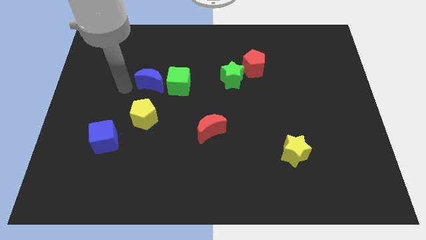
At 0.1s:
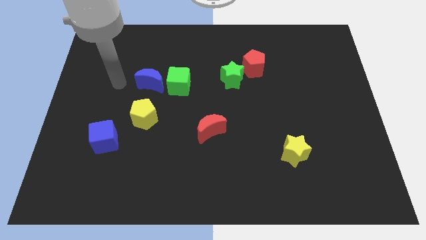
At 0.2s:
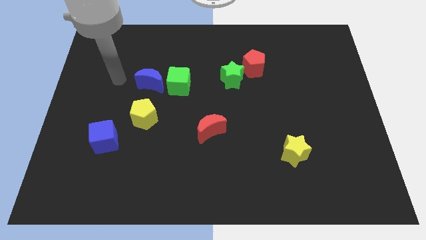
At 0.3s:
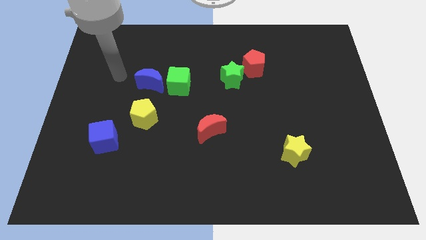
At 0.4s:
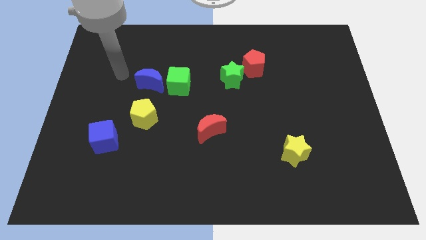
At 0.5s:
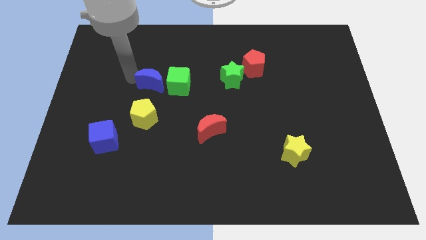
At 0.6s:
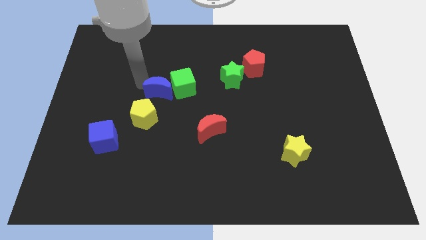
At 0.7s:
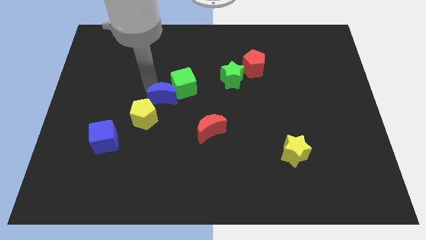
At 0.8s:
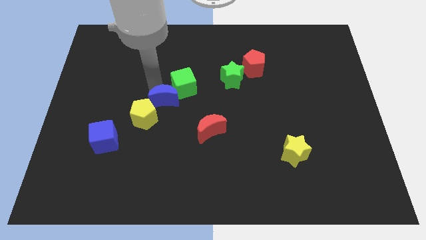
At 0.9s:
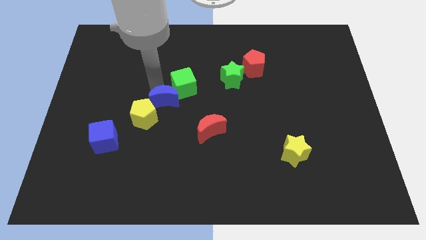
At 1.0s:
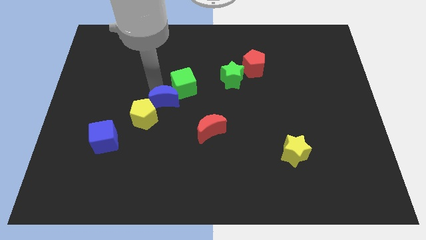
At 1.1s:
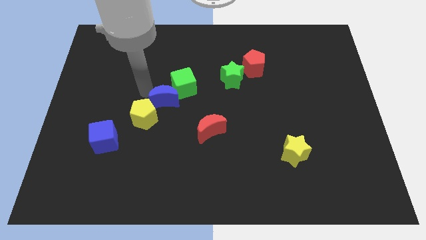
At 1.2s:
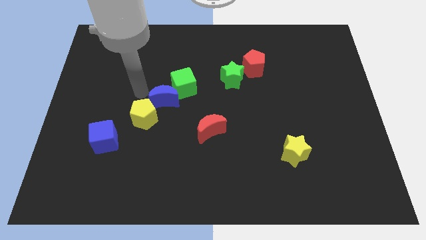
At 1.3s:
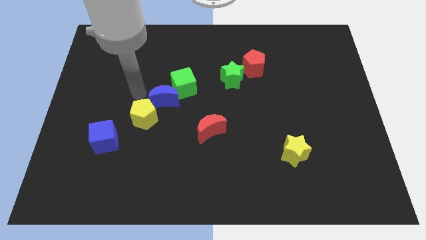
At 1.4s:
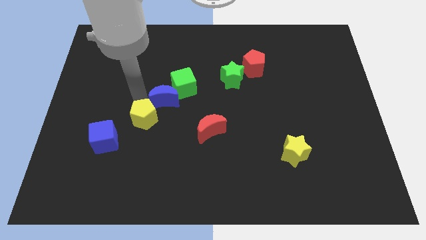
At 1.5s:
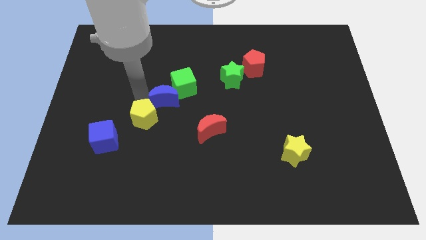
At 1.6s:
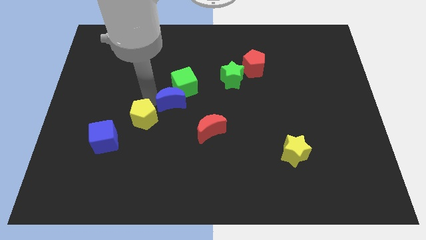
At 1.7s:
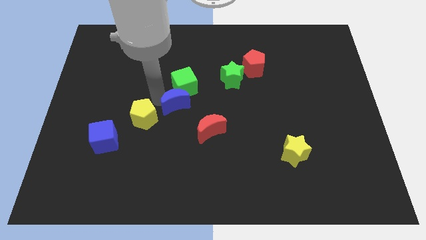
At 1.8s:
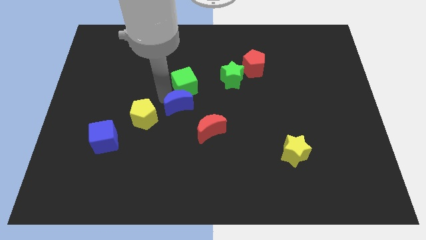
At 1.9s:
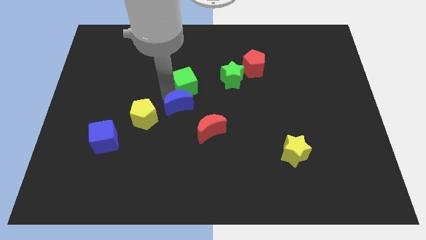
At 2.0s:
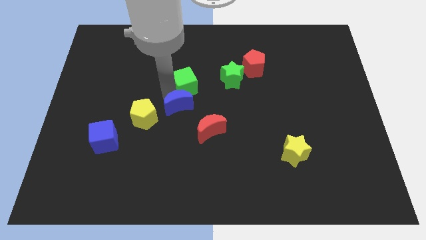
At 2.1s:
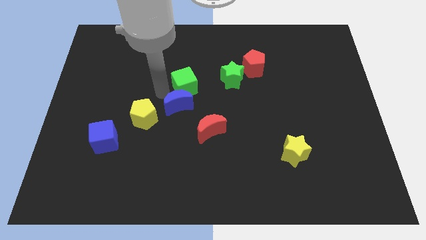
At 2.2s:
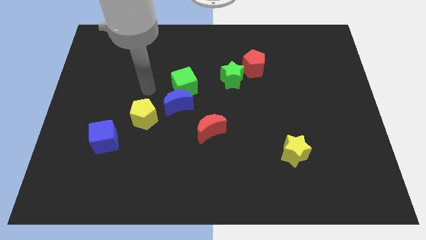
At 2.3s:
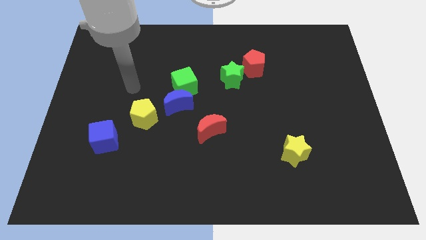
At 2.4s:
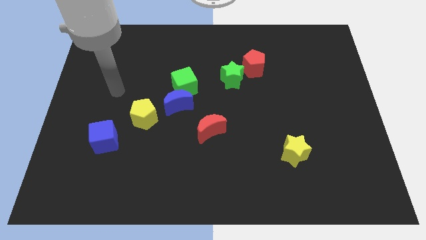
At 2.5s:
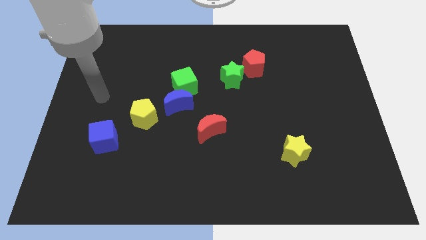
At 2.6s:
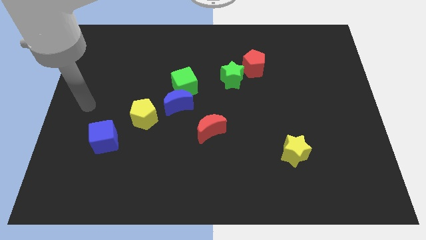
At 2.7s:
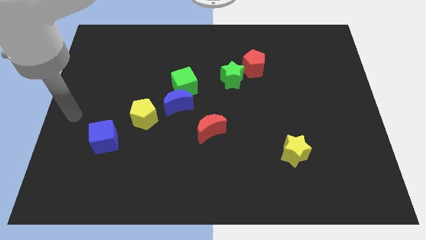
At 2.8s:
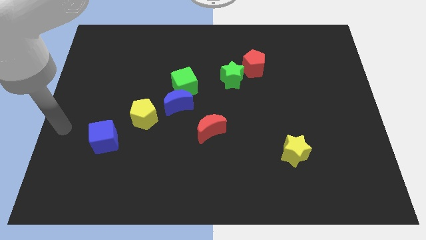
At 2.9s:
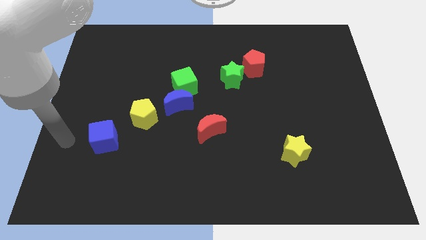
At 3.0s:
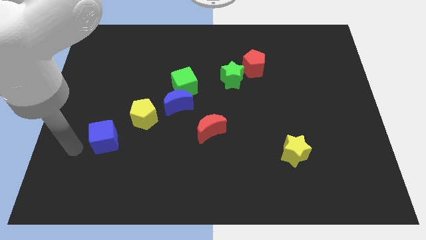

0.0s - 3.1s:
push the blue moon parallel to the red moon

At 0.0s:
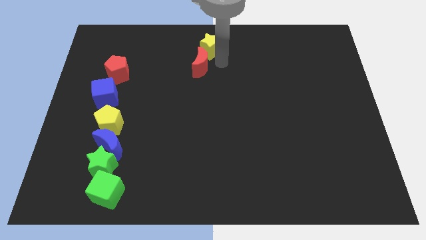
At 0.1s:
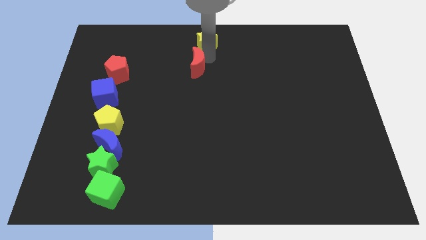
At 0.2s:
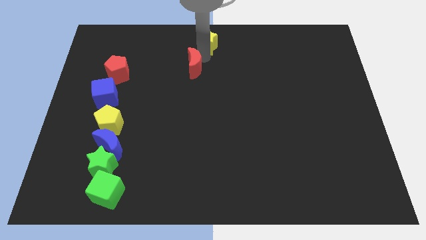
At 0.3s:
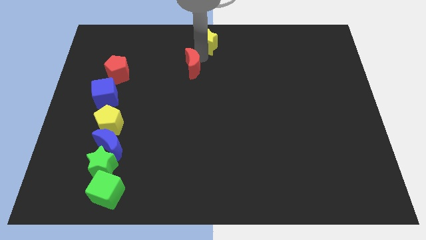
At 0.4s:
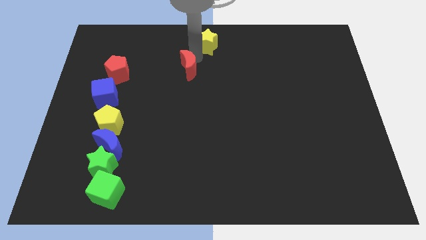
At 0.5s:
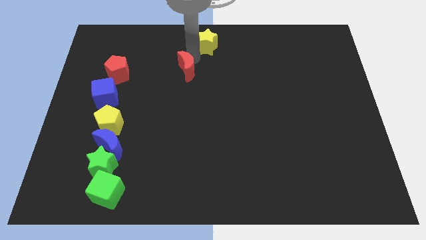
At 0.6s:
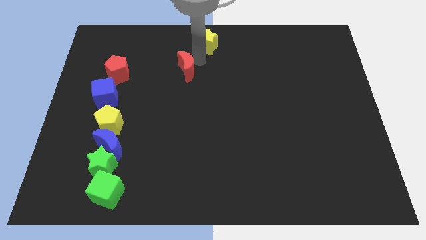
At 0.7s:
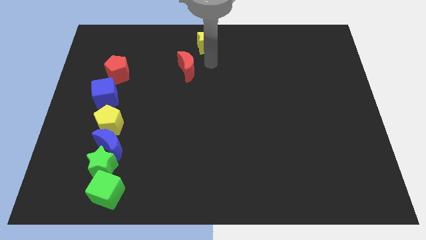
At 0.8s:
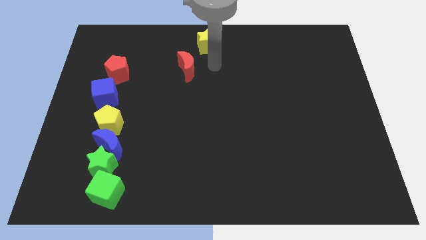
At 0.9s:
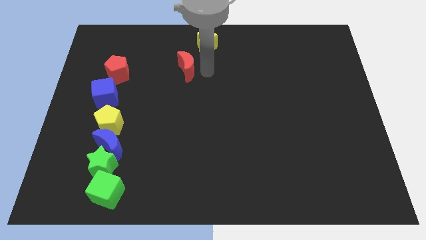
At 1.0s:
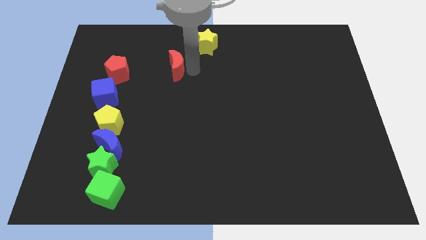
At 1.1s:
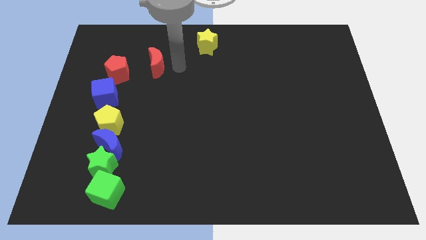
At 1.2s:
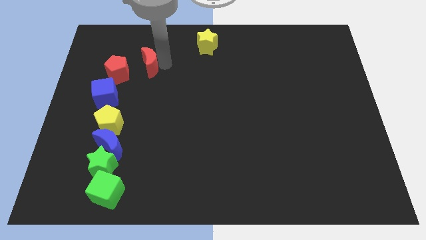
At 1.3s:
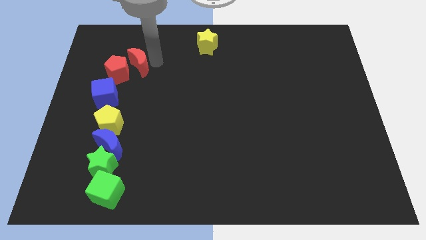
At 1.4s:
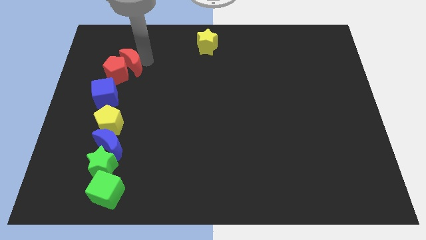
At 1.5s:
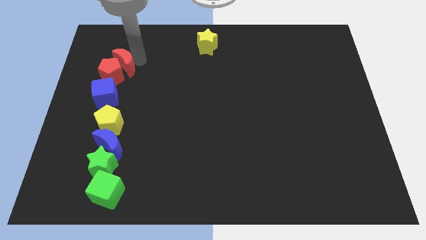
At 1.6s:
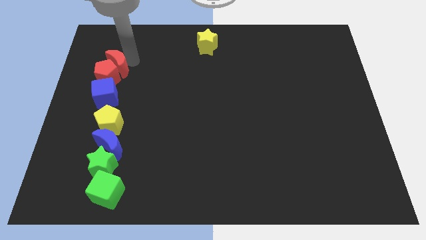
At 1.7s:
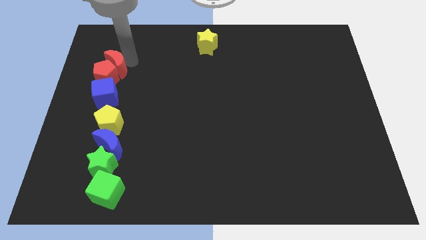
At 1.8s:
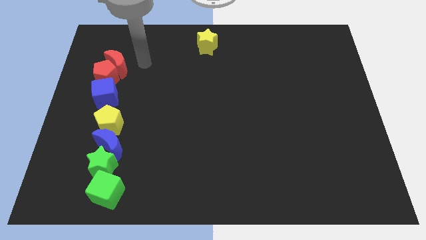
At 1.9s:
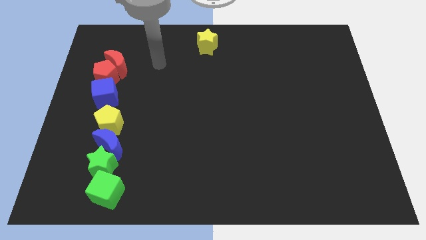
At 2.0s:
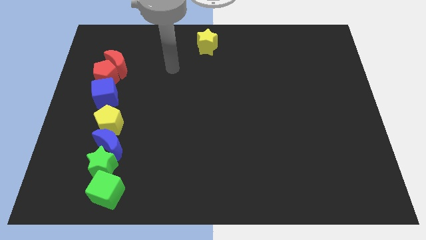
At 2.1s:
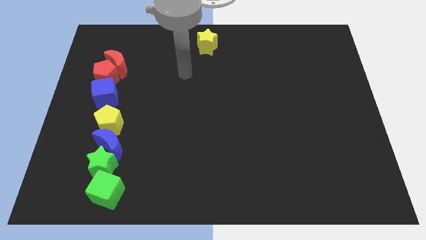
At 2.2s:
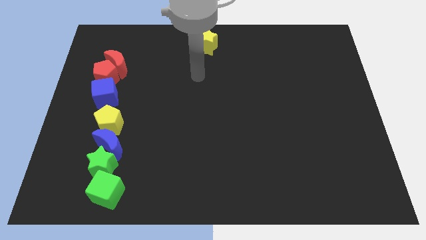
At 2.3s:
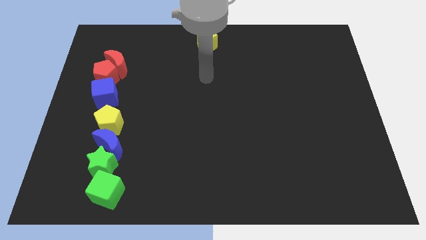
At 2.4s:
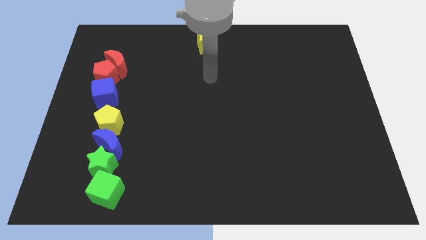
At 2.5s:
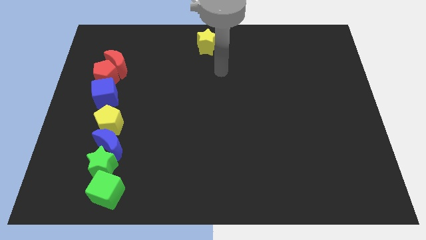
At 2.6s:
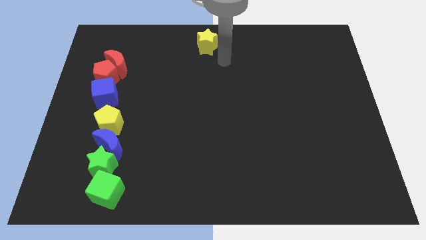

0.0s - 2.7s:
move the red crescent to the top right side of the red pentagon

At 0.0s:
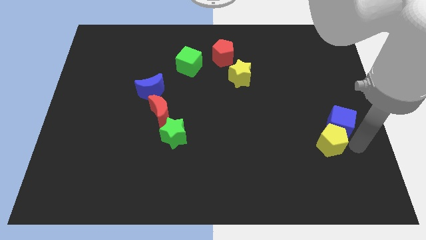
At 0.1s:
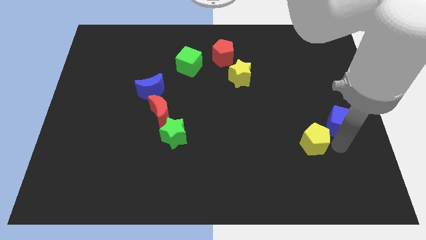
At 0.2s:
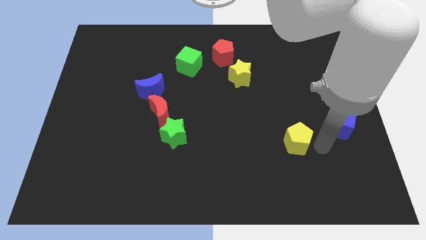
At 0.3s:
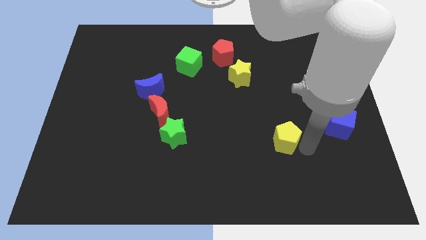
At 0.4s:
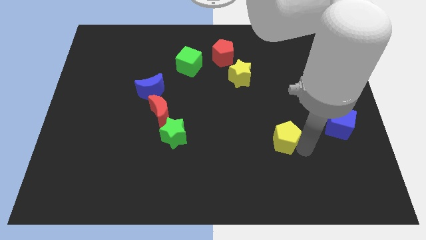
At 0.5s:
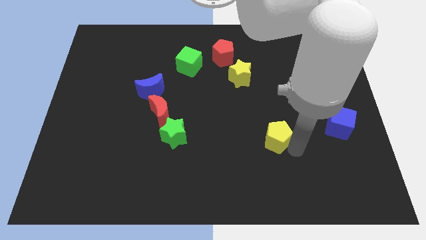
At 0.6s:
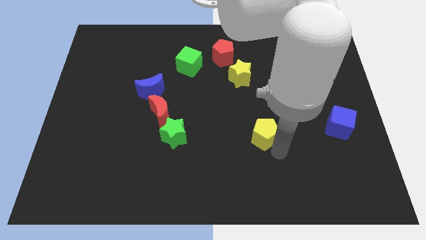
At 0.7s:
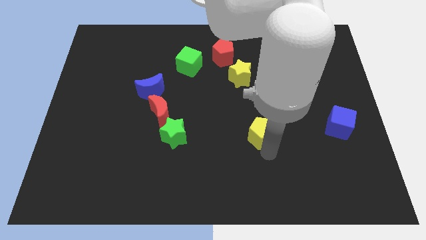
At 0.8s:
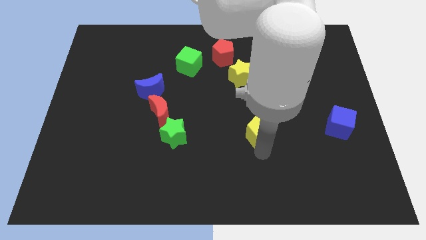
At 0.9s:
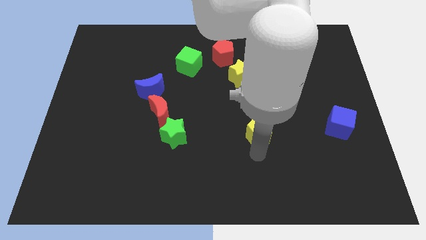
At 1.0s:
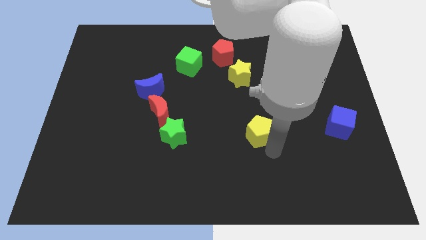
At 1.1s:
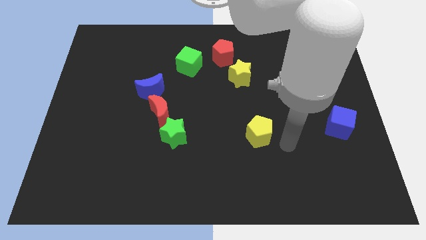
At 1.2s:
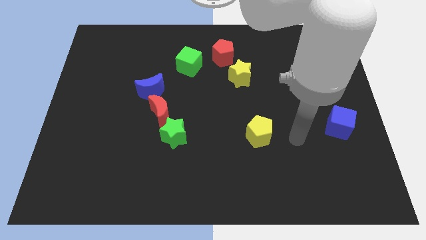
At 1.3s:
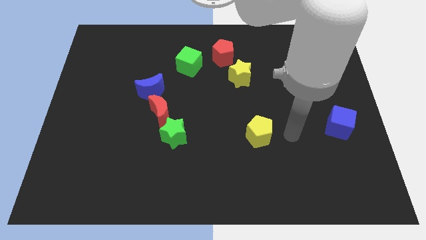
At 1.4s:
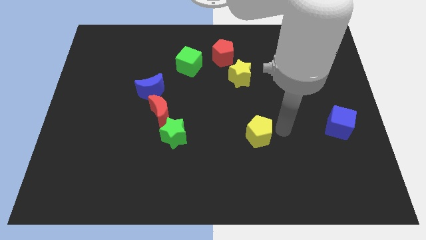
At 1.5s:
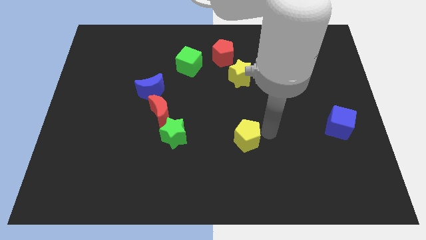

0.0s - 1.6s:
push the yellow pentagon to the bottom of the yellow star

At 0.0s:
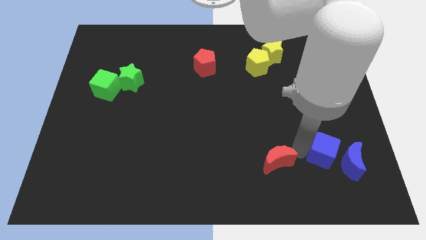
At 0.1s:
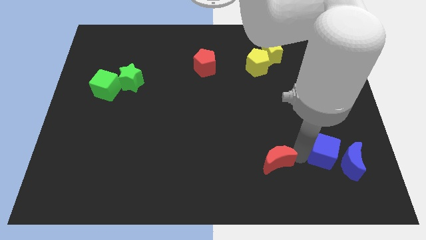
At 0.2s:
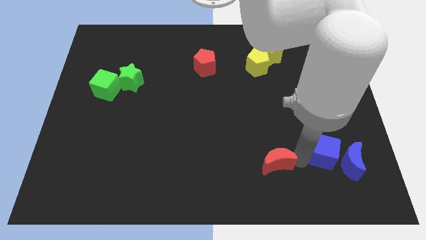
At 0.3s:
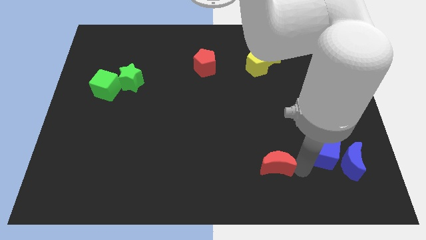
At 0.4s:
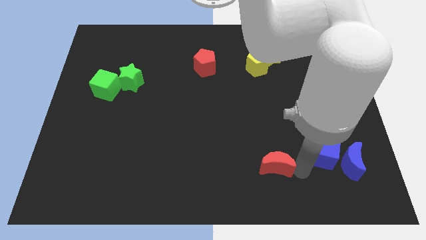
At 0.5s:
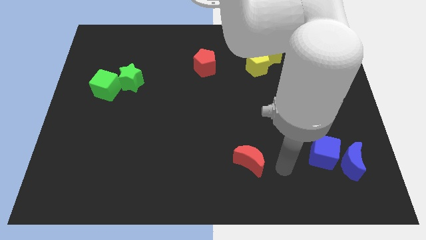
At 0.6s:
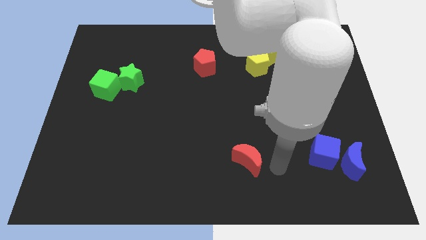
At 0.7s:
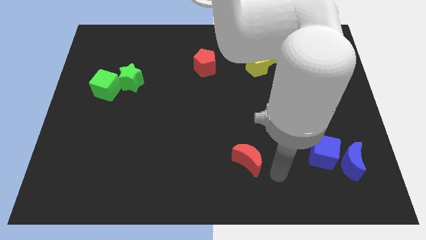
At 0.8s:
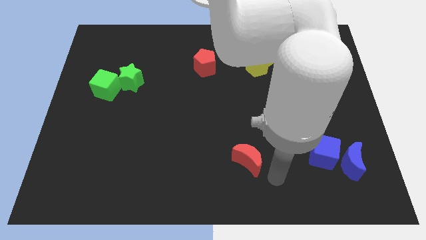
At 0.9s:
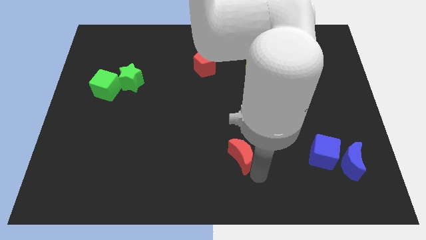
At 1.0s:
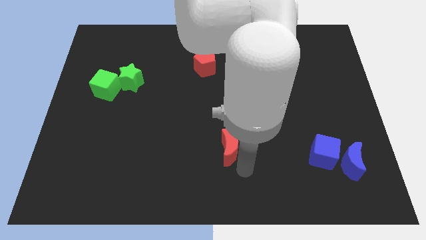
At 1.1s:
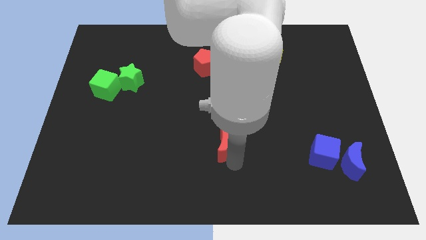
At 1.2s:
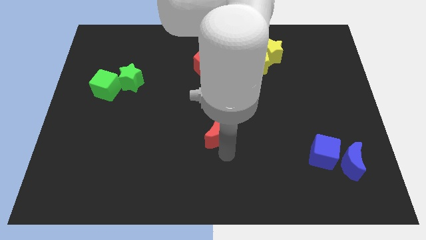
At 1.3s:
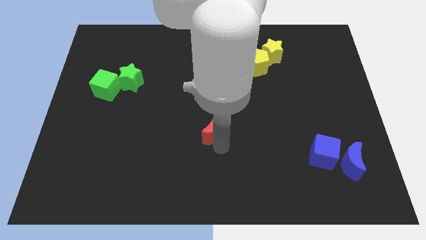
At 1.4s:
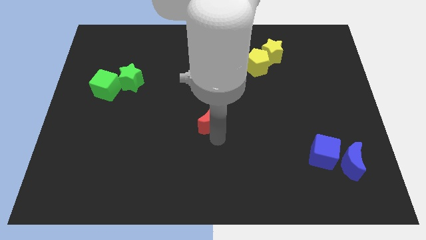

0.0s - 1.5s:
place red moon to the center of the board

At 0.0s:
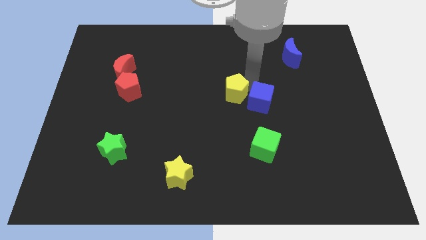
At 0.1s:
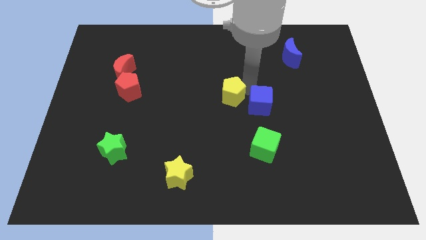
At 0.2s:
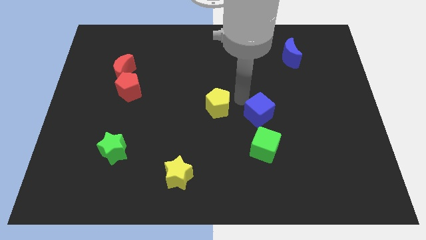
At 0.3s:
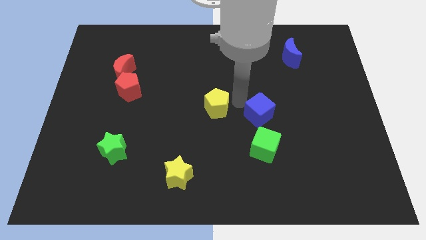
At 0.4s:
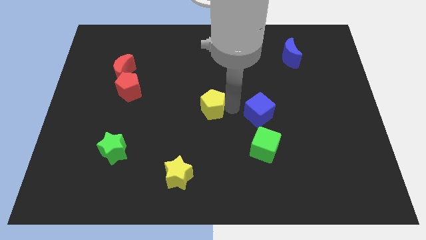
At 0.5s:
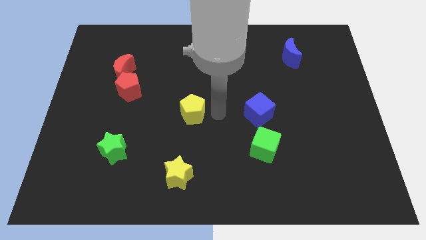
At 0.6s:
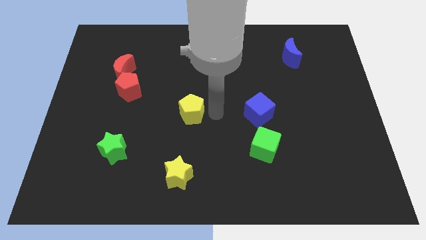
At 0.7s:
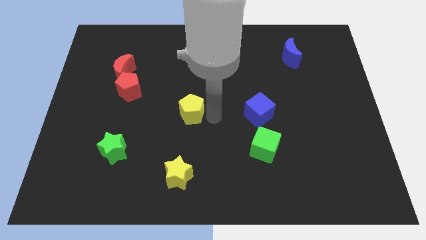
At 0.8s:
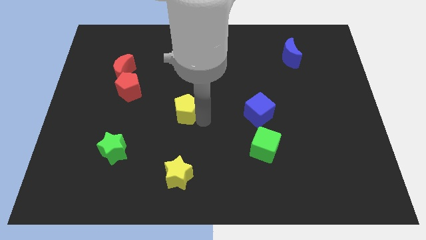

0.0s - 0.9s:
push yellow pentagon above yellow star
